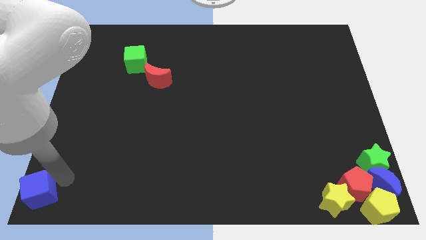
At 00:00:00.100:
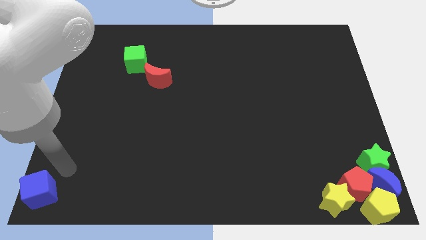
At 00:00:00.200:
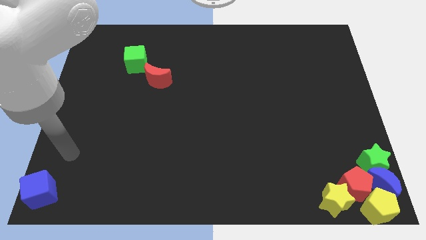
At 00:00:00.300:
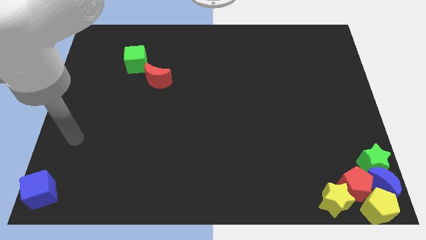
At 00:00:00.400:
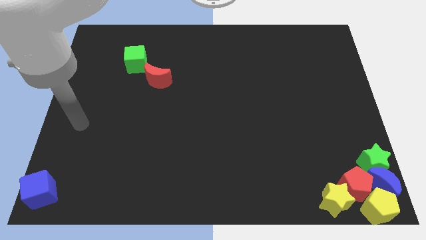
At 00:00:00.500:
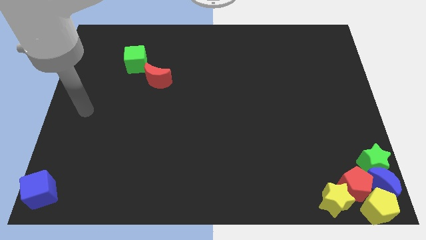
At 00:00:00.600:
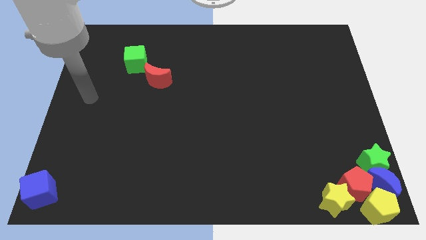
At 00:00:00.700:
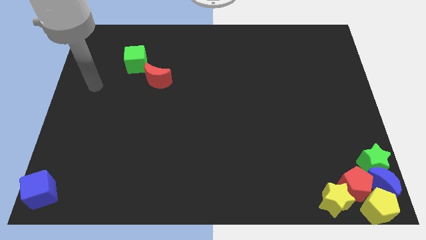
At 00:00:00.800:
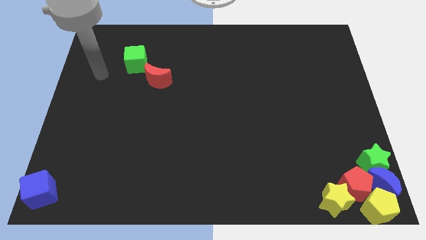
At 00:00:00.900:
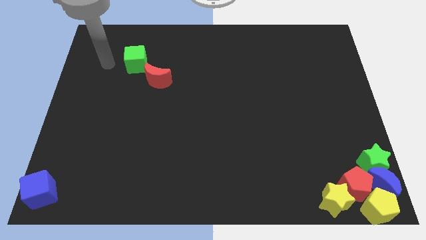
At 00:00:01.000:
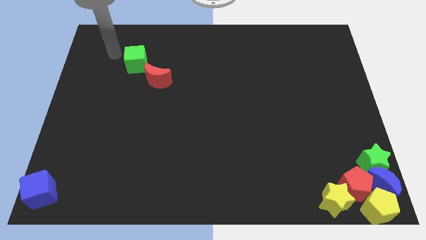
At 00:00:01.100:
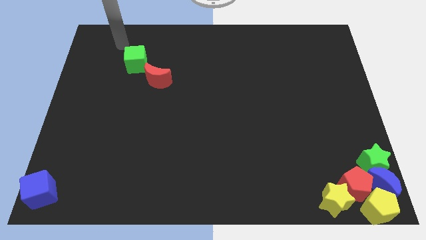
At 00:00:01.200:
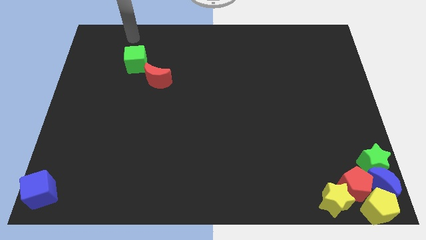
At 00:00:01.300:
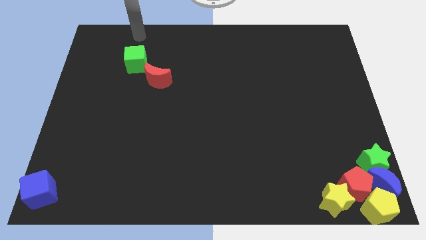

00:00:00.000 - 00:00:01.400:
move your arm away from blue cube

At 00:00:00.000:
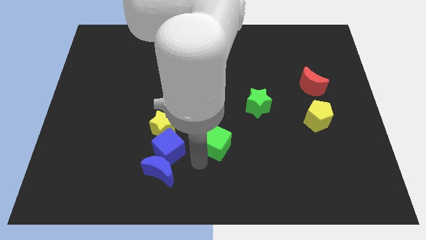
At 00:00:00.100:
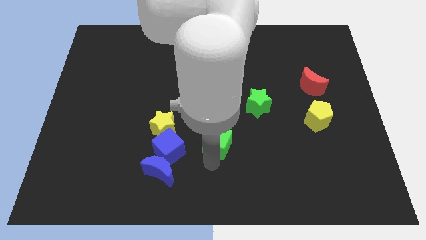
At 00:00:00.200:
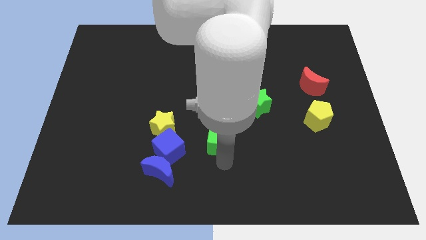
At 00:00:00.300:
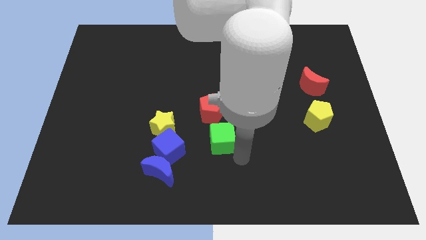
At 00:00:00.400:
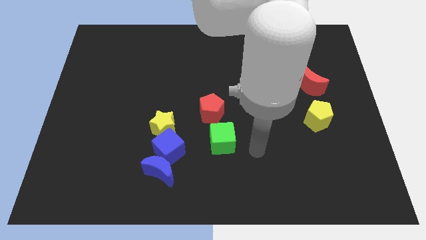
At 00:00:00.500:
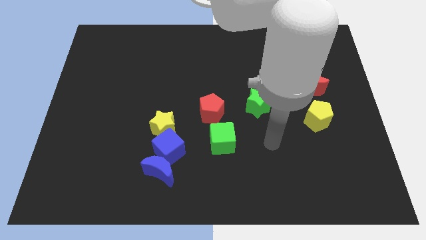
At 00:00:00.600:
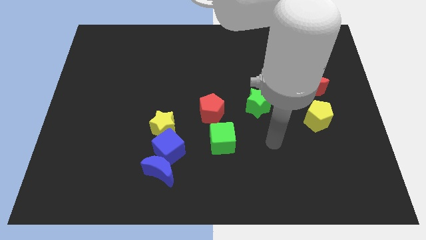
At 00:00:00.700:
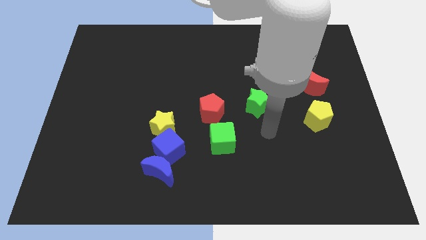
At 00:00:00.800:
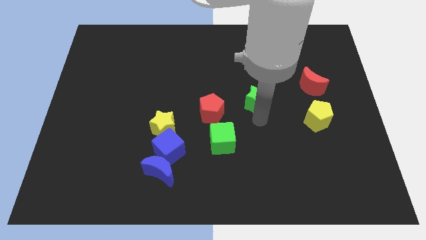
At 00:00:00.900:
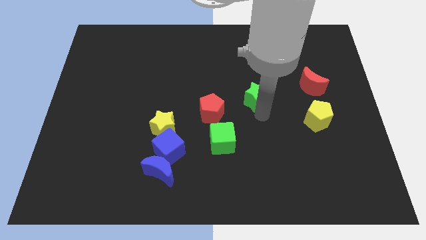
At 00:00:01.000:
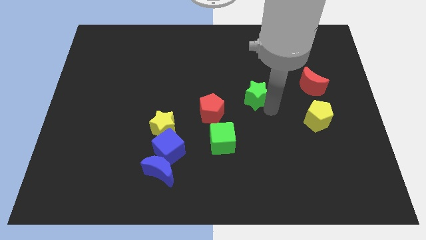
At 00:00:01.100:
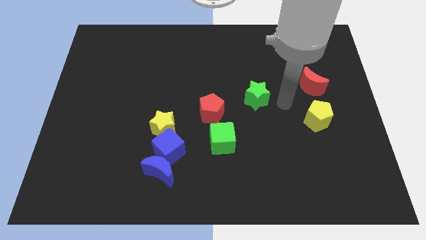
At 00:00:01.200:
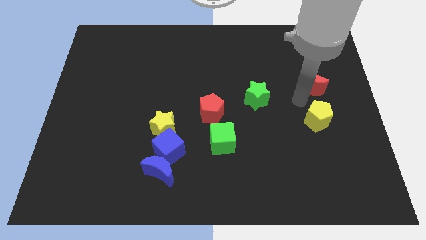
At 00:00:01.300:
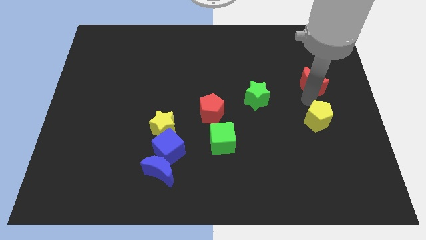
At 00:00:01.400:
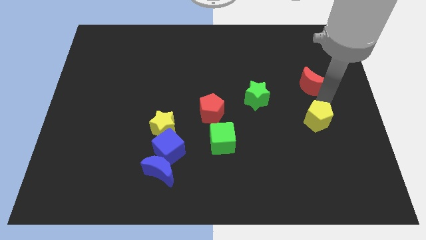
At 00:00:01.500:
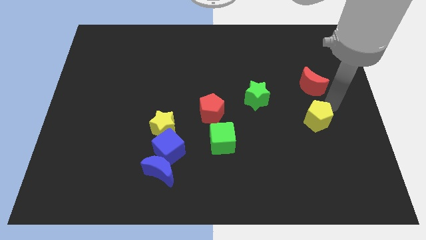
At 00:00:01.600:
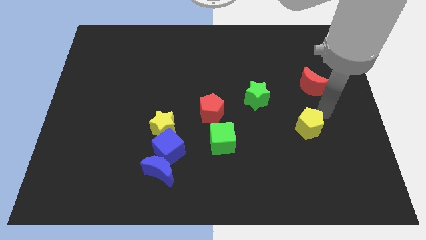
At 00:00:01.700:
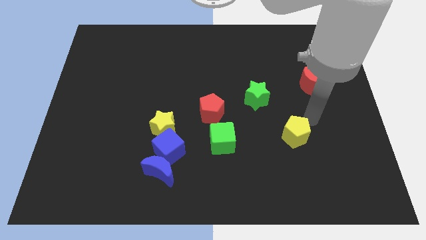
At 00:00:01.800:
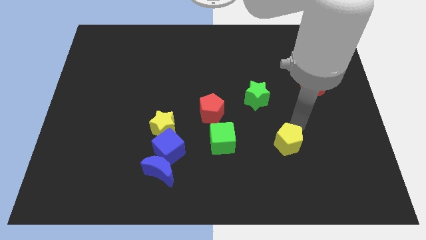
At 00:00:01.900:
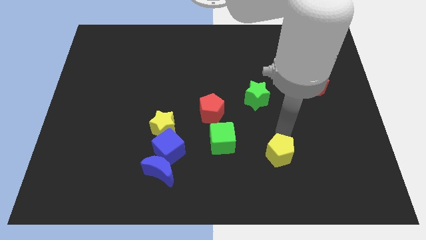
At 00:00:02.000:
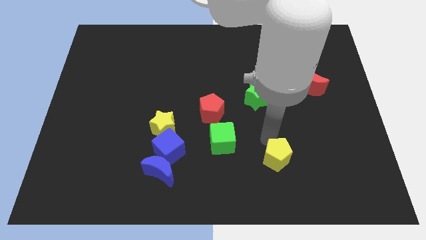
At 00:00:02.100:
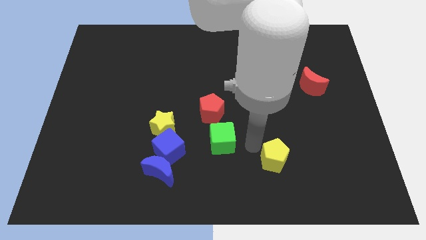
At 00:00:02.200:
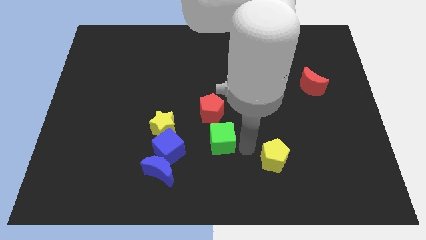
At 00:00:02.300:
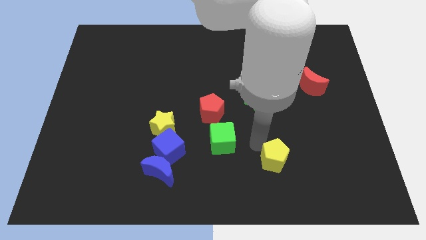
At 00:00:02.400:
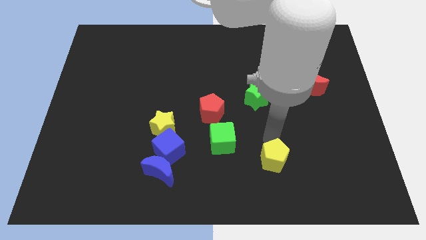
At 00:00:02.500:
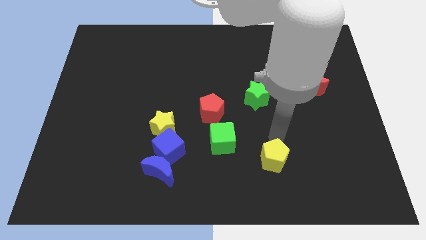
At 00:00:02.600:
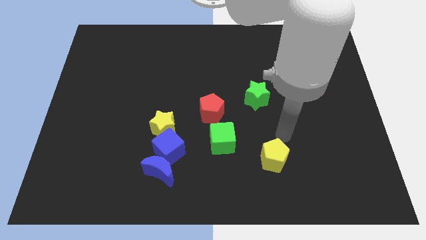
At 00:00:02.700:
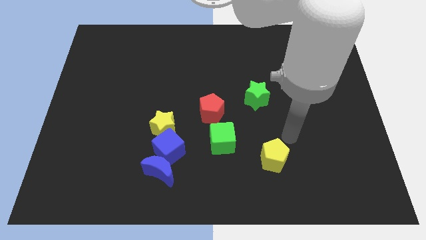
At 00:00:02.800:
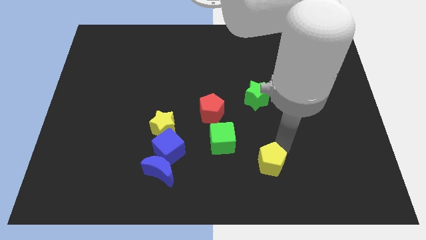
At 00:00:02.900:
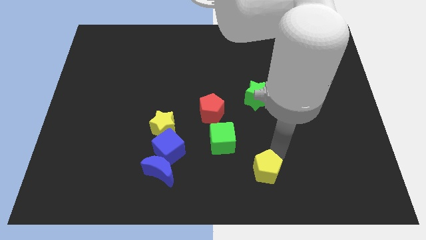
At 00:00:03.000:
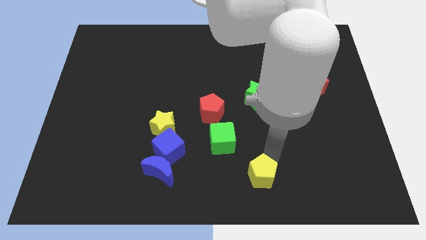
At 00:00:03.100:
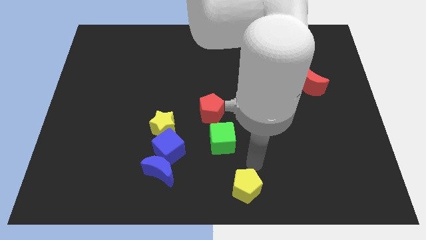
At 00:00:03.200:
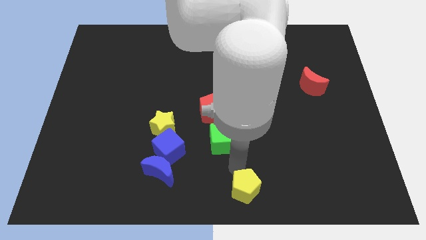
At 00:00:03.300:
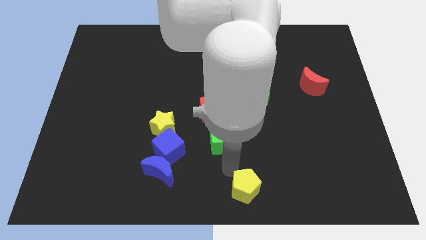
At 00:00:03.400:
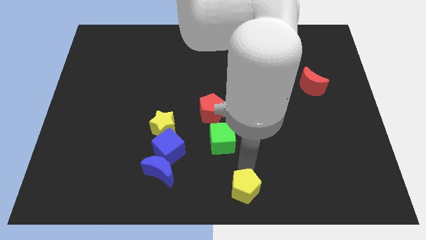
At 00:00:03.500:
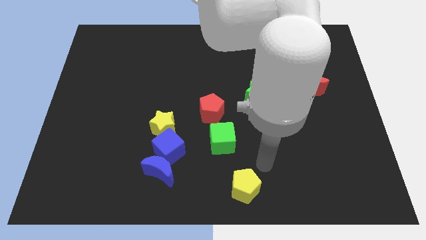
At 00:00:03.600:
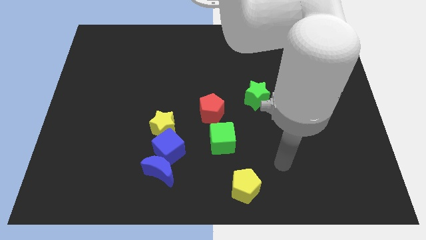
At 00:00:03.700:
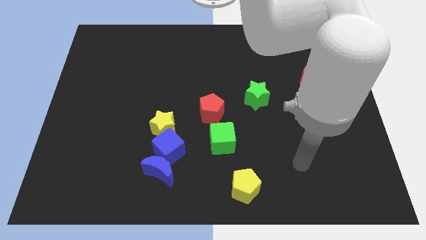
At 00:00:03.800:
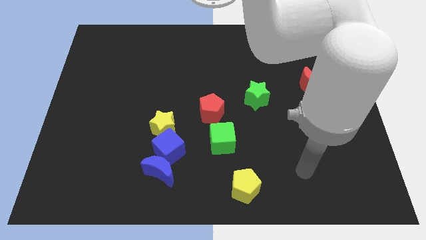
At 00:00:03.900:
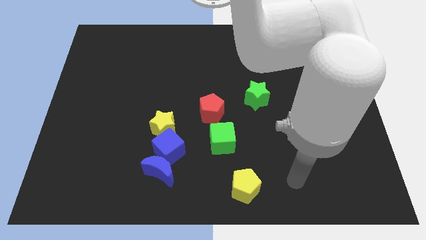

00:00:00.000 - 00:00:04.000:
push green star in order to move yellow pentagon

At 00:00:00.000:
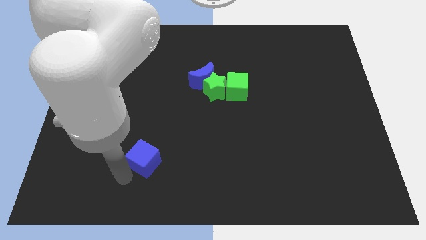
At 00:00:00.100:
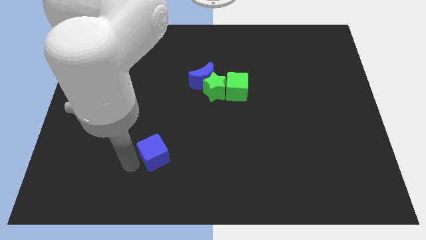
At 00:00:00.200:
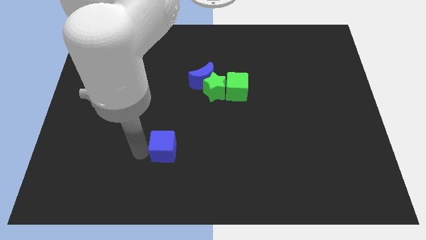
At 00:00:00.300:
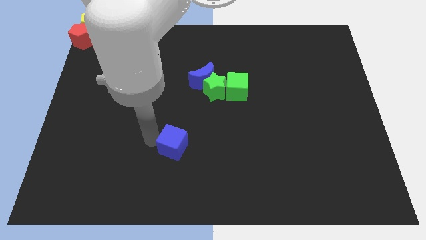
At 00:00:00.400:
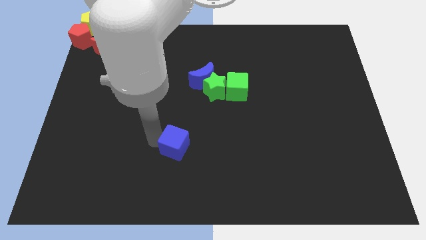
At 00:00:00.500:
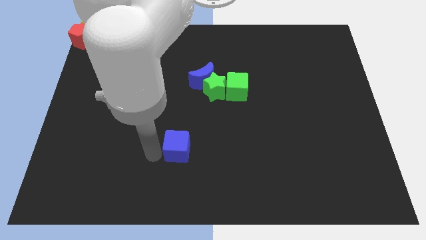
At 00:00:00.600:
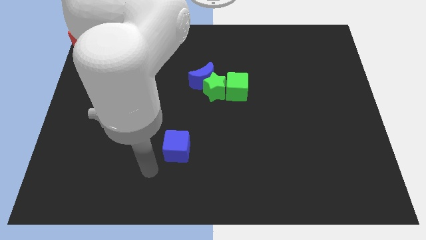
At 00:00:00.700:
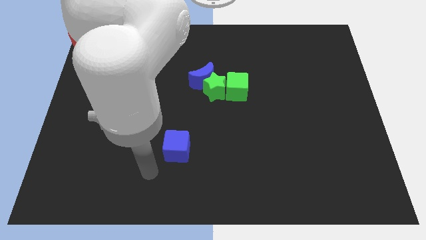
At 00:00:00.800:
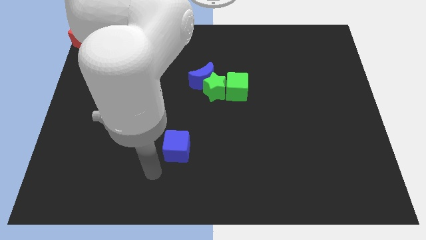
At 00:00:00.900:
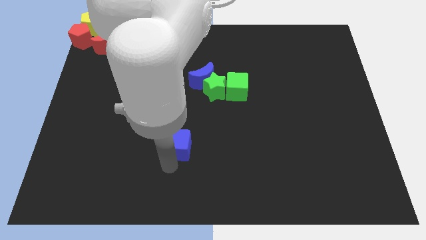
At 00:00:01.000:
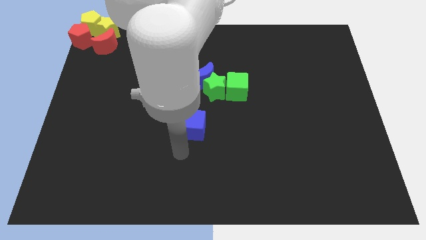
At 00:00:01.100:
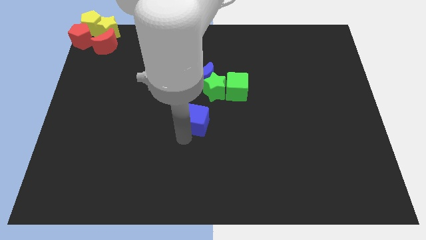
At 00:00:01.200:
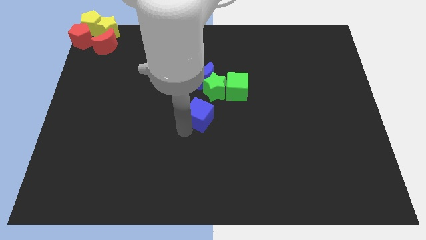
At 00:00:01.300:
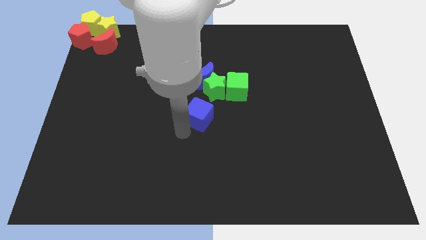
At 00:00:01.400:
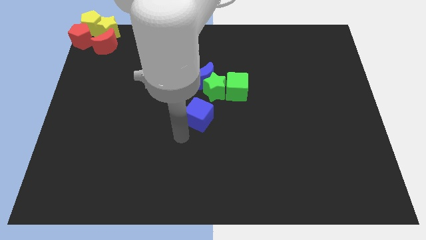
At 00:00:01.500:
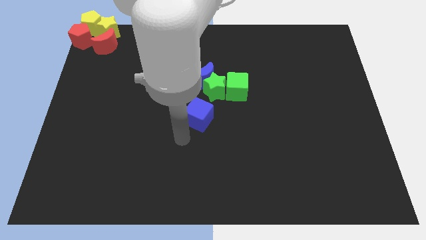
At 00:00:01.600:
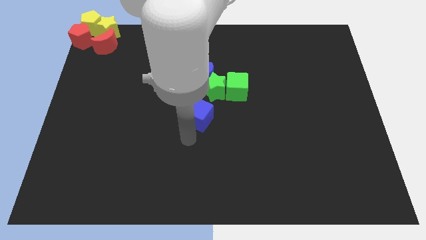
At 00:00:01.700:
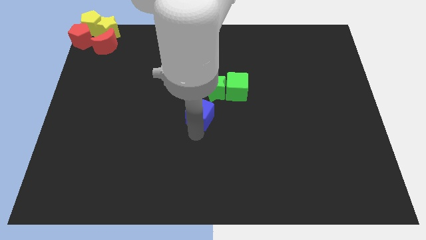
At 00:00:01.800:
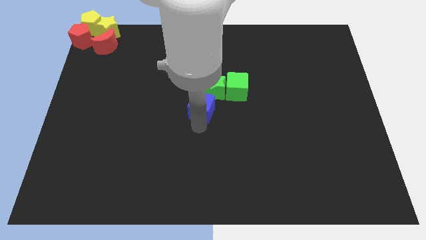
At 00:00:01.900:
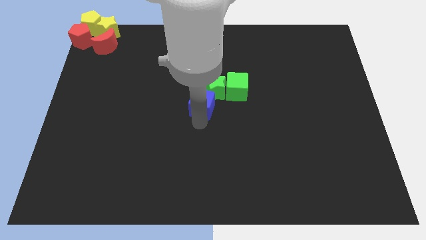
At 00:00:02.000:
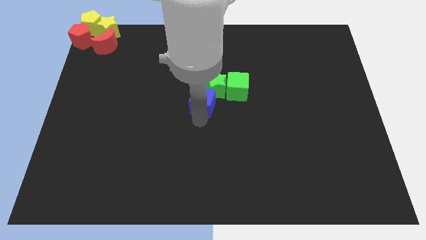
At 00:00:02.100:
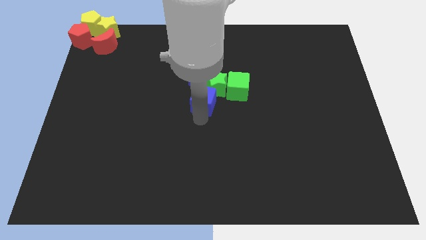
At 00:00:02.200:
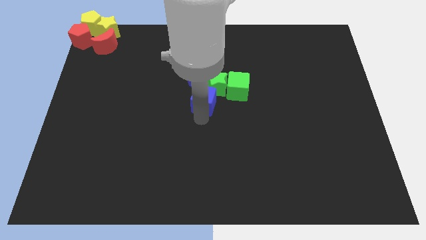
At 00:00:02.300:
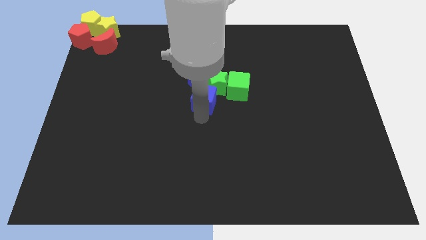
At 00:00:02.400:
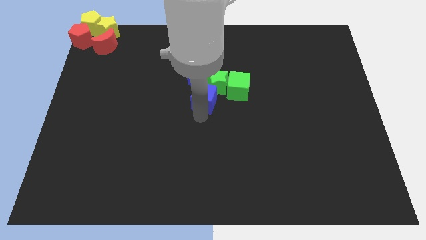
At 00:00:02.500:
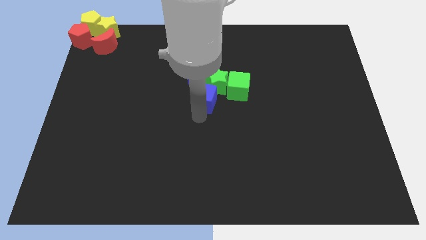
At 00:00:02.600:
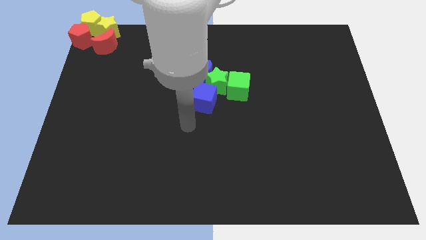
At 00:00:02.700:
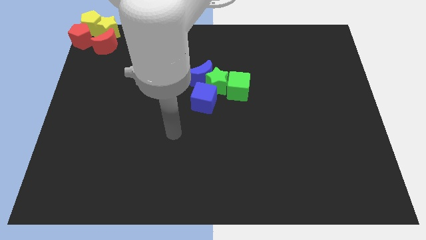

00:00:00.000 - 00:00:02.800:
push blue cube into group of blocks at the center of board

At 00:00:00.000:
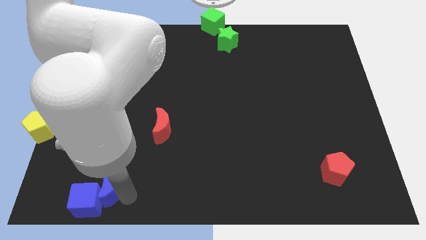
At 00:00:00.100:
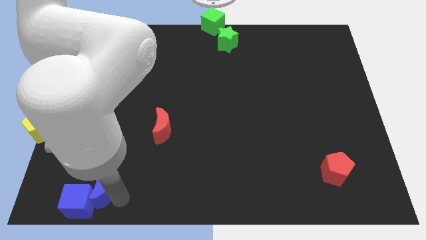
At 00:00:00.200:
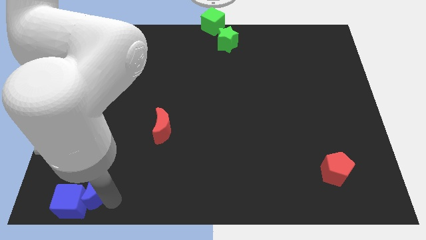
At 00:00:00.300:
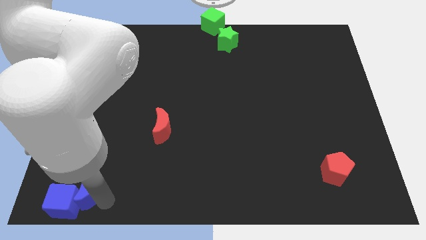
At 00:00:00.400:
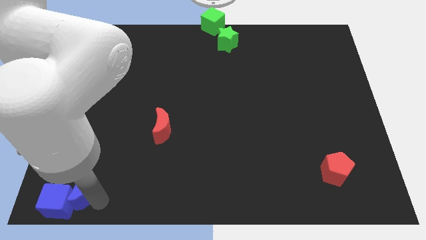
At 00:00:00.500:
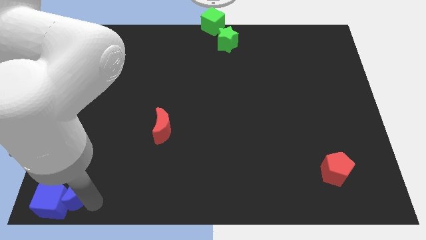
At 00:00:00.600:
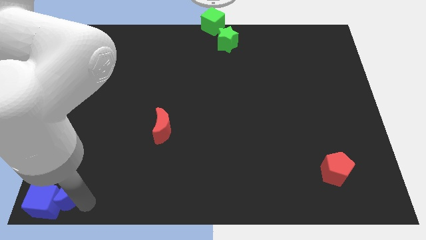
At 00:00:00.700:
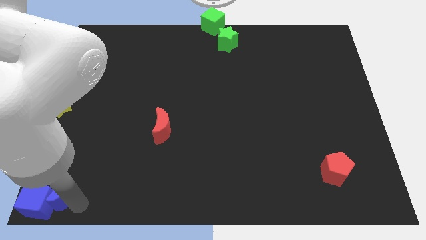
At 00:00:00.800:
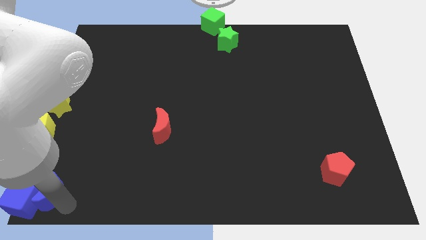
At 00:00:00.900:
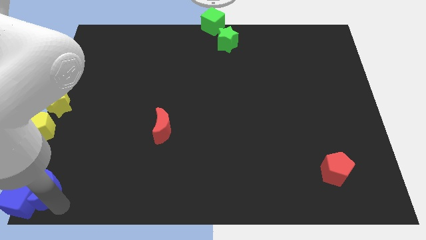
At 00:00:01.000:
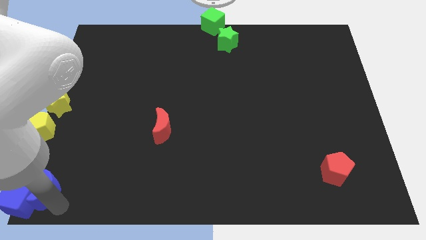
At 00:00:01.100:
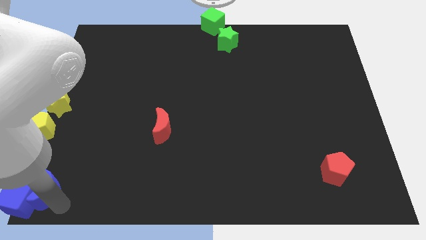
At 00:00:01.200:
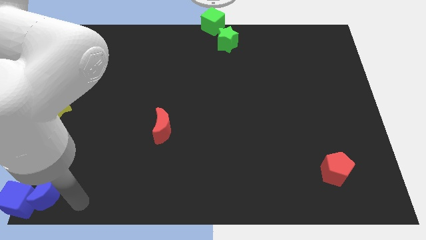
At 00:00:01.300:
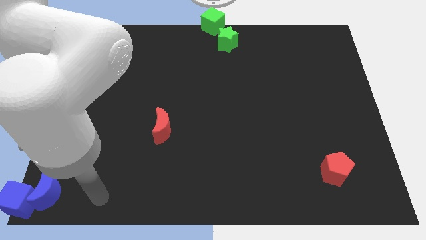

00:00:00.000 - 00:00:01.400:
place the blue blocks at the bottom left corner
